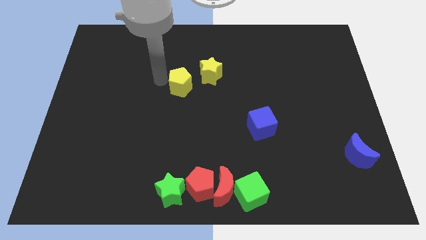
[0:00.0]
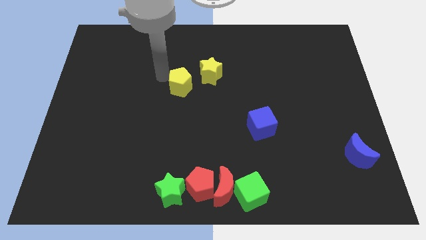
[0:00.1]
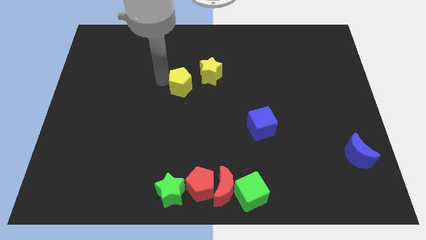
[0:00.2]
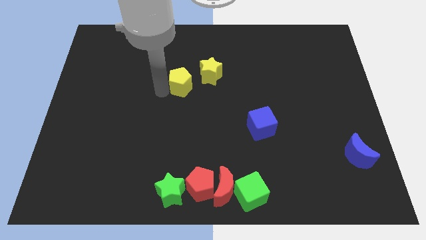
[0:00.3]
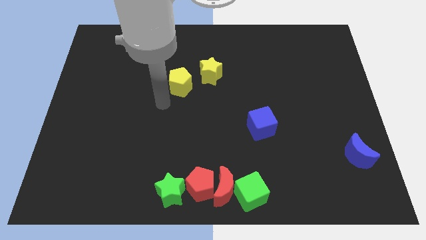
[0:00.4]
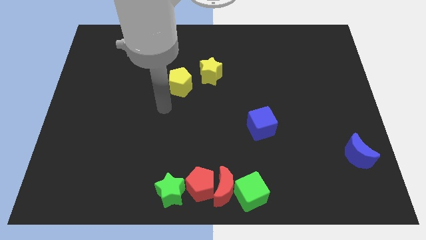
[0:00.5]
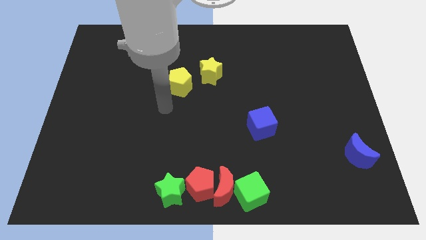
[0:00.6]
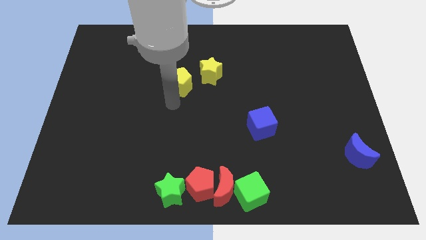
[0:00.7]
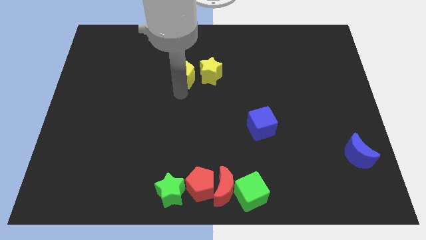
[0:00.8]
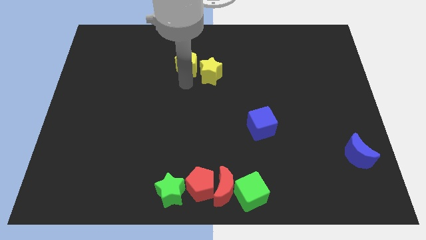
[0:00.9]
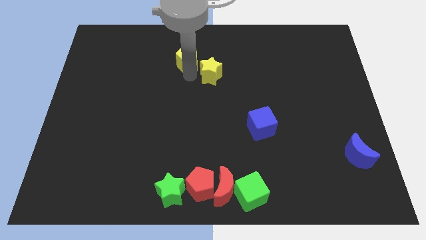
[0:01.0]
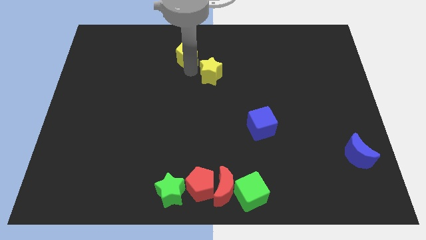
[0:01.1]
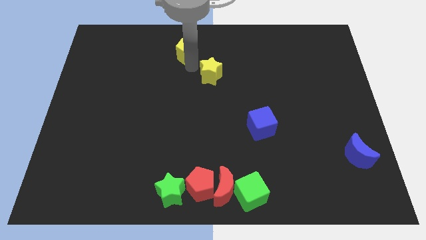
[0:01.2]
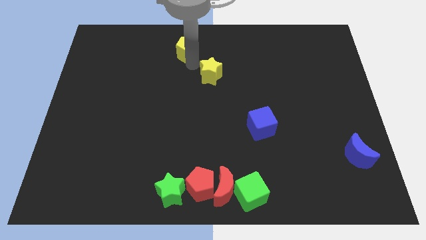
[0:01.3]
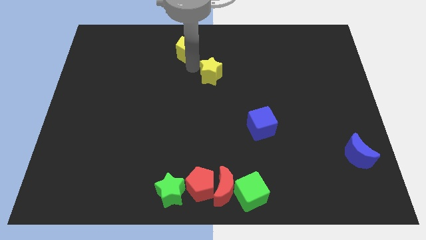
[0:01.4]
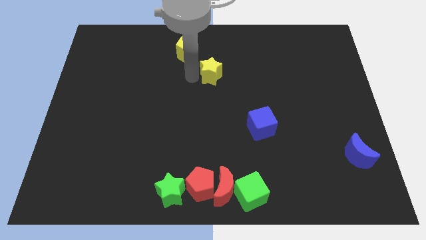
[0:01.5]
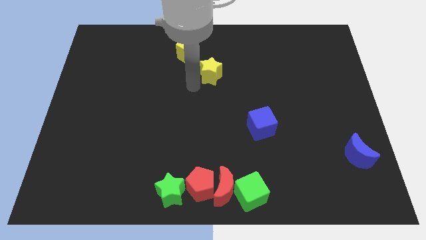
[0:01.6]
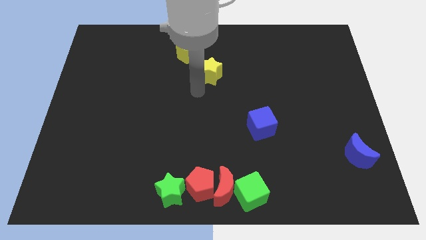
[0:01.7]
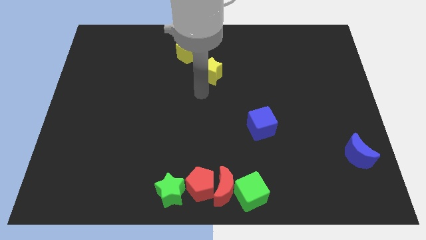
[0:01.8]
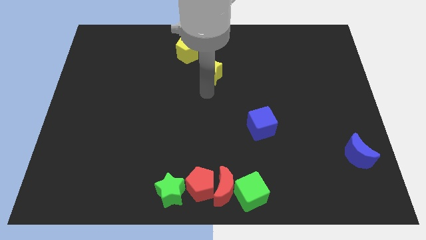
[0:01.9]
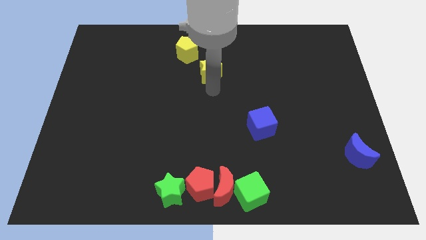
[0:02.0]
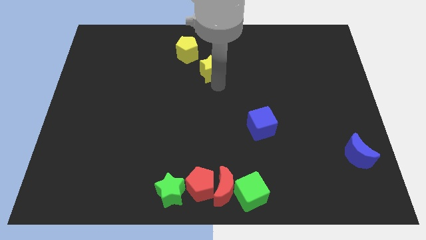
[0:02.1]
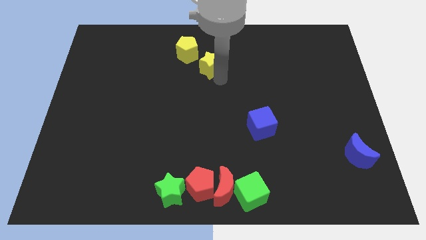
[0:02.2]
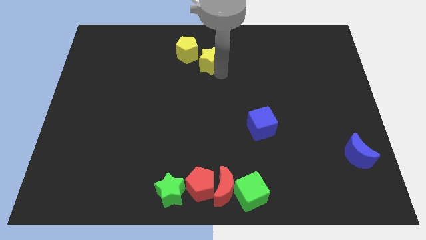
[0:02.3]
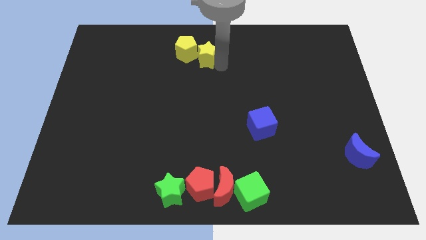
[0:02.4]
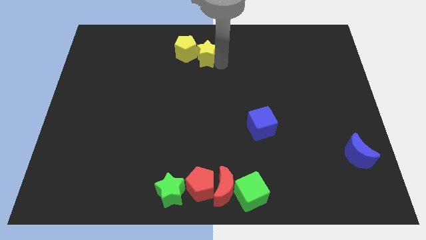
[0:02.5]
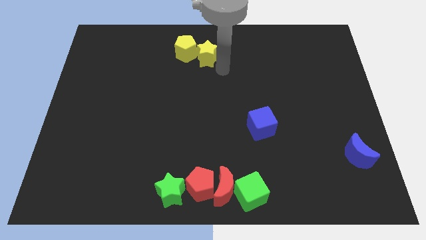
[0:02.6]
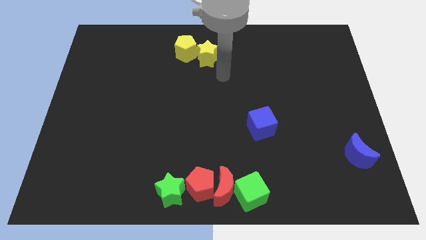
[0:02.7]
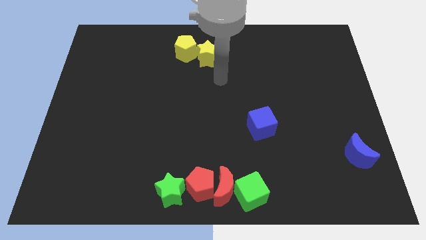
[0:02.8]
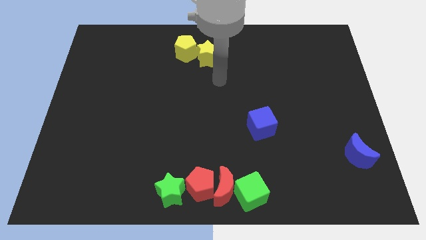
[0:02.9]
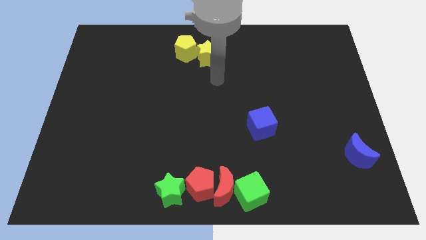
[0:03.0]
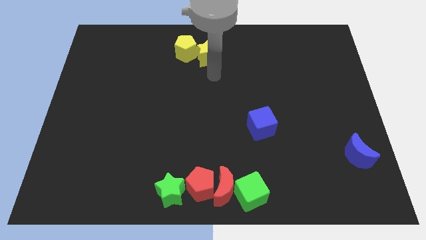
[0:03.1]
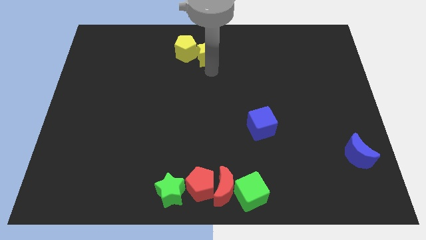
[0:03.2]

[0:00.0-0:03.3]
push the yellow pentagon towards the top center of the board

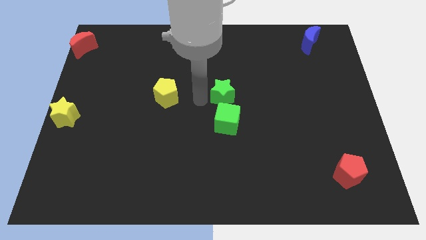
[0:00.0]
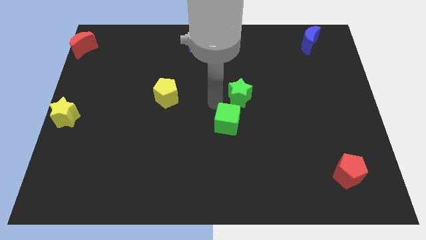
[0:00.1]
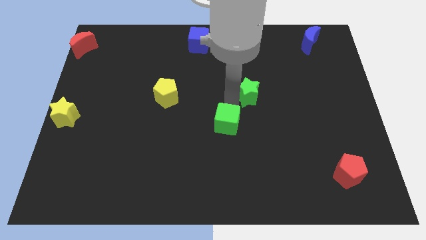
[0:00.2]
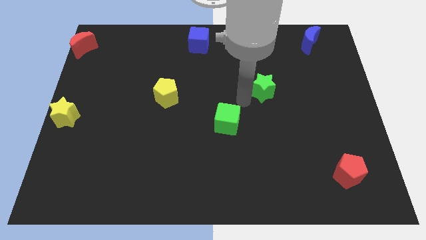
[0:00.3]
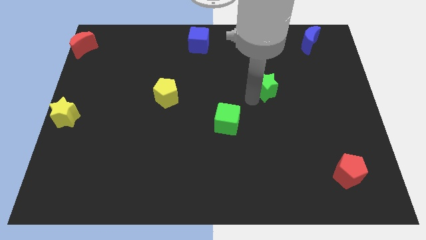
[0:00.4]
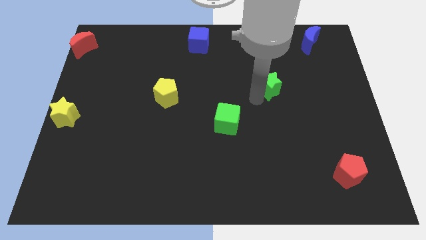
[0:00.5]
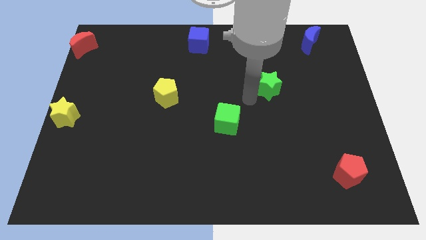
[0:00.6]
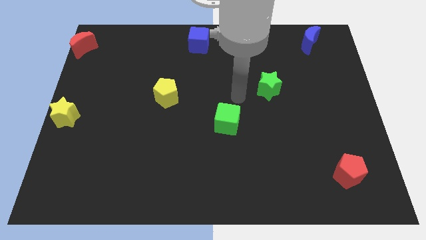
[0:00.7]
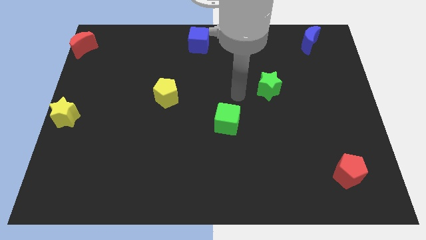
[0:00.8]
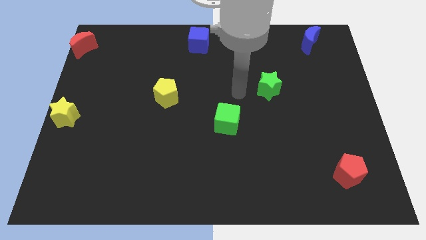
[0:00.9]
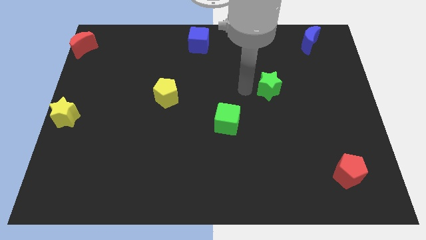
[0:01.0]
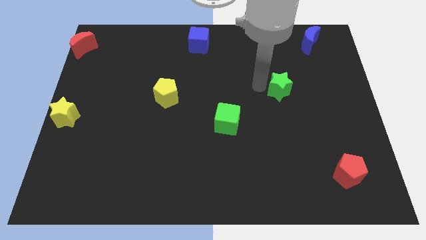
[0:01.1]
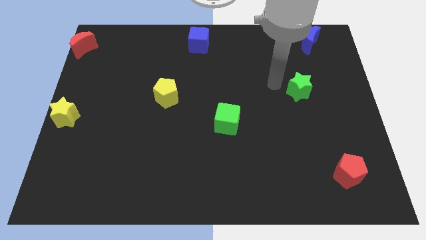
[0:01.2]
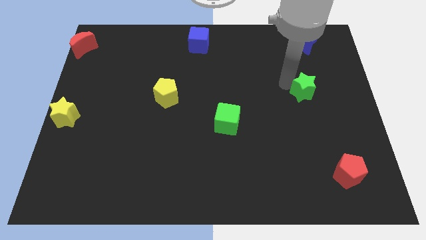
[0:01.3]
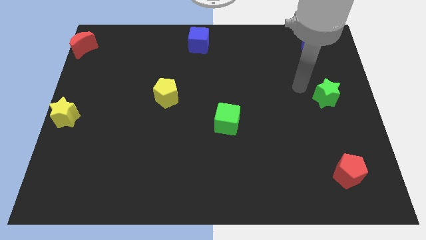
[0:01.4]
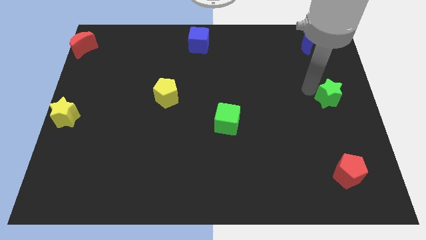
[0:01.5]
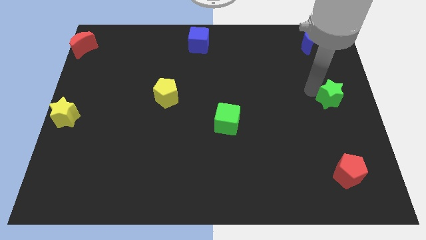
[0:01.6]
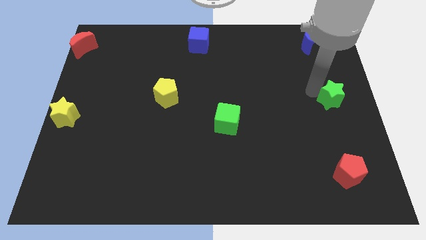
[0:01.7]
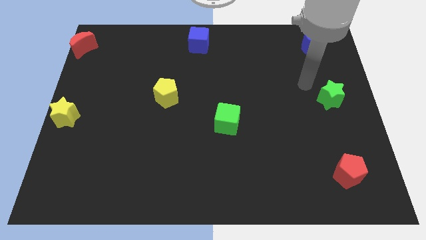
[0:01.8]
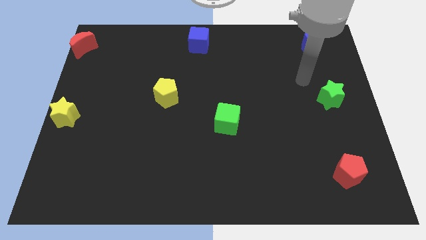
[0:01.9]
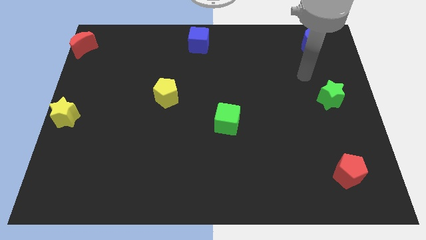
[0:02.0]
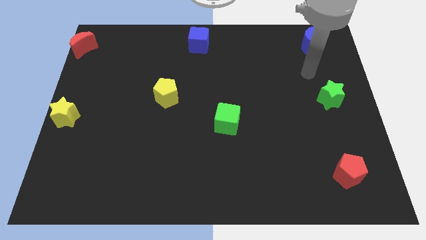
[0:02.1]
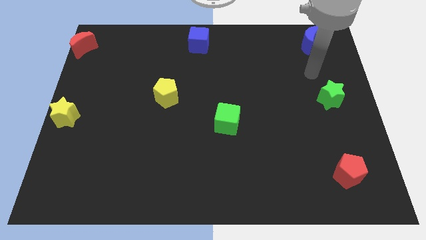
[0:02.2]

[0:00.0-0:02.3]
move the green star to the center right of the board

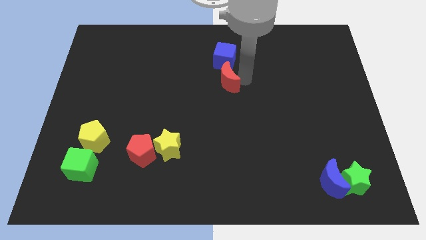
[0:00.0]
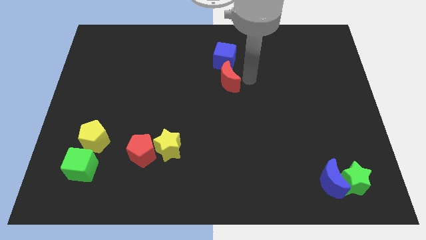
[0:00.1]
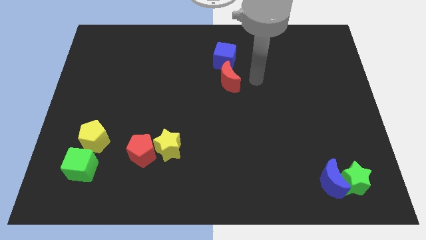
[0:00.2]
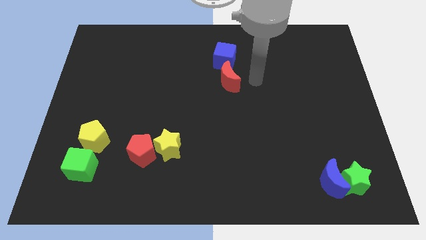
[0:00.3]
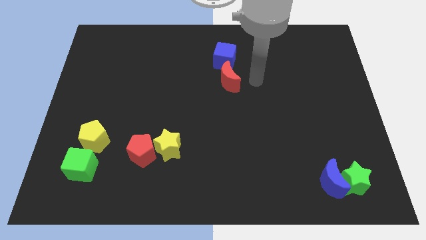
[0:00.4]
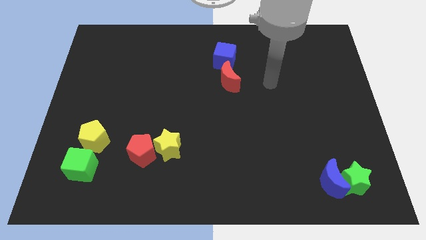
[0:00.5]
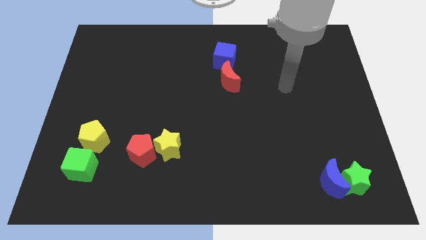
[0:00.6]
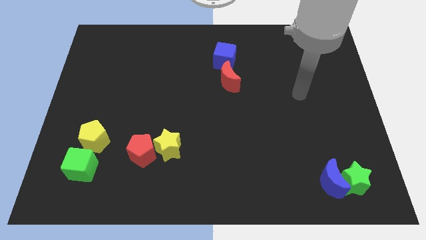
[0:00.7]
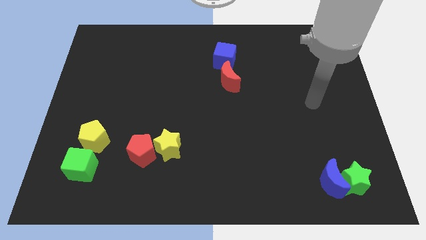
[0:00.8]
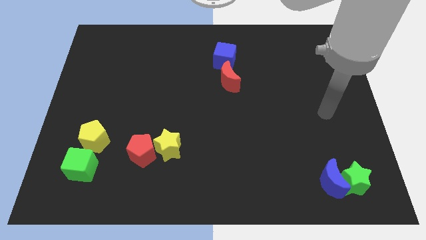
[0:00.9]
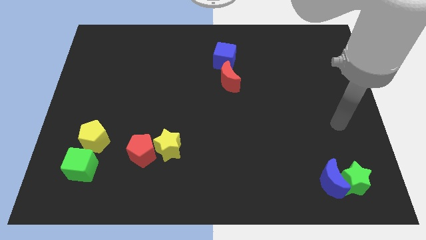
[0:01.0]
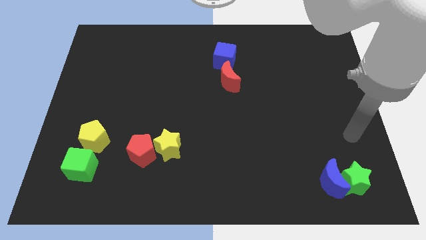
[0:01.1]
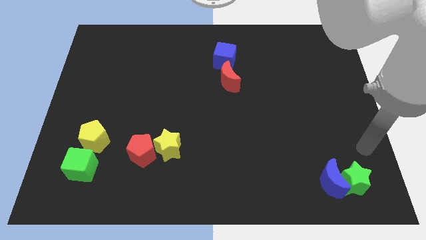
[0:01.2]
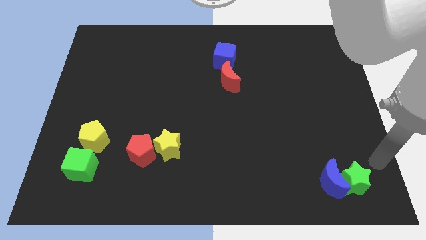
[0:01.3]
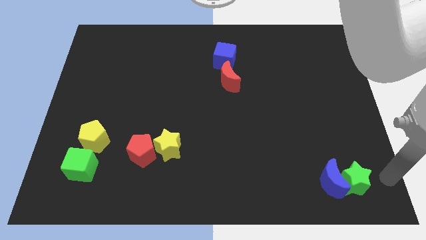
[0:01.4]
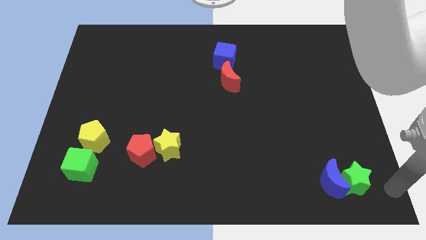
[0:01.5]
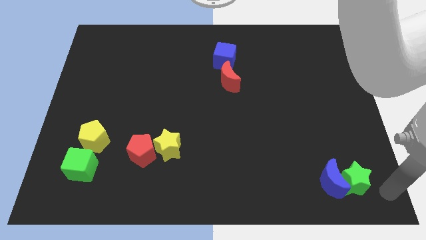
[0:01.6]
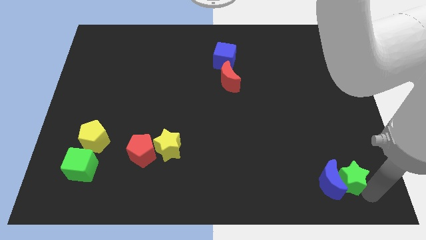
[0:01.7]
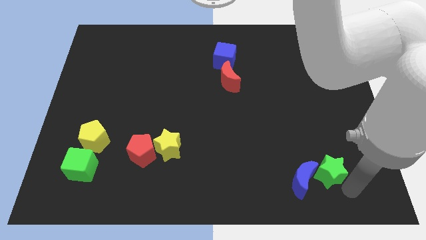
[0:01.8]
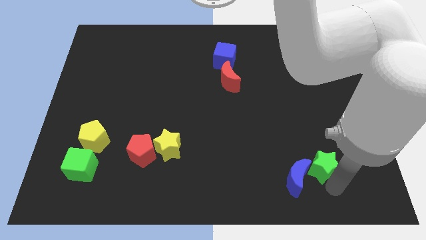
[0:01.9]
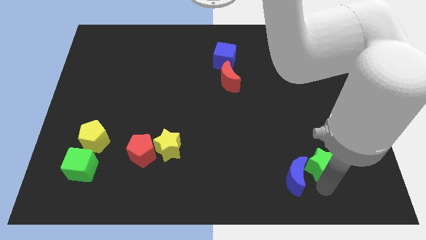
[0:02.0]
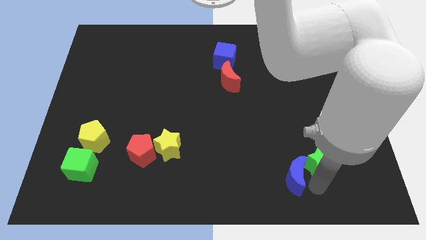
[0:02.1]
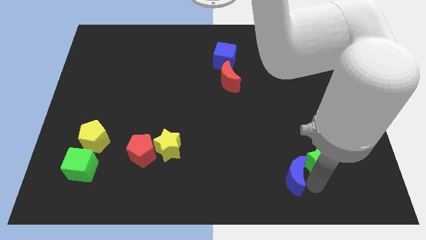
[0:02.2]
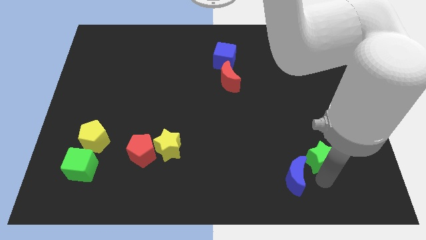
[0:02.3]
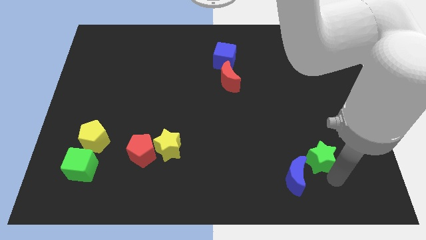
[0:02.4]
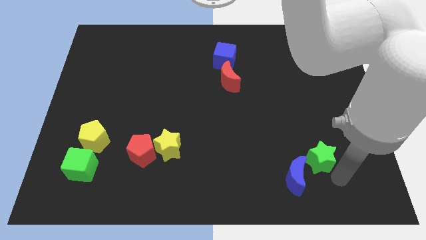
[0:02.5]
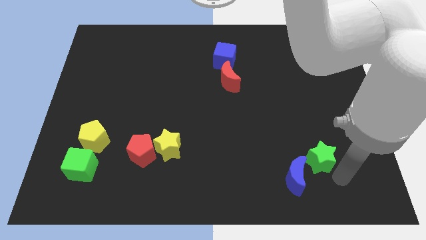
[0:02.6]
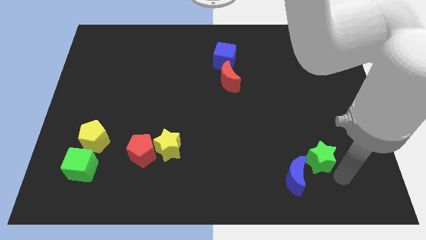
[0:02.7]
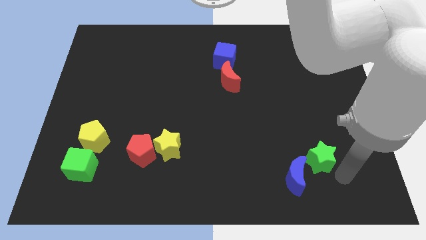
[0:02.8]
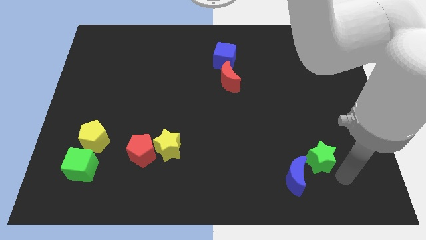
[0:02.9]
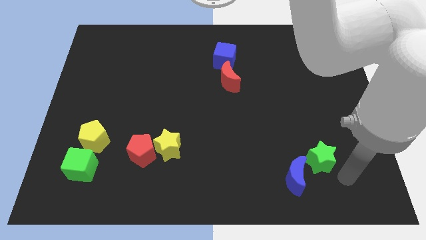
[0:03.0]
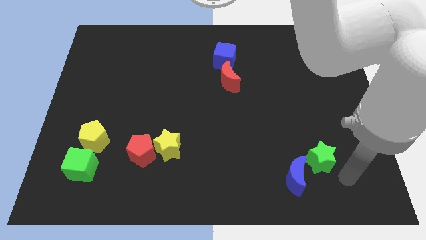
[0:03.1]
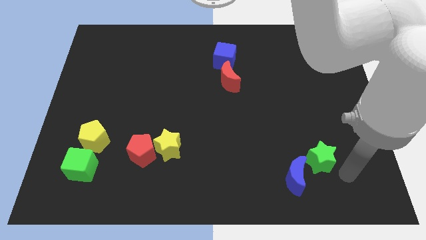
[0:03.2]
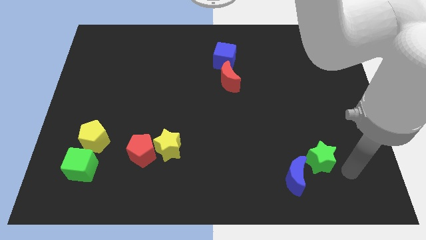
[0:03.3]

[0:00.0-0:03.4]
push the blue moon and yellow star towards the left side of the board

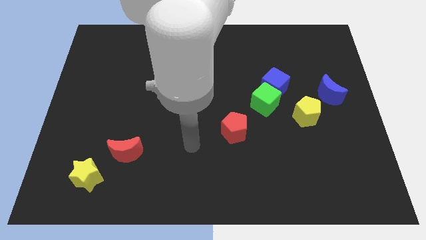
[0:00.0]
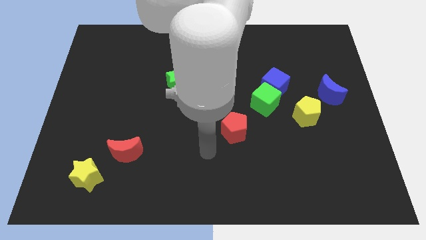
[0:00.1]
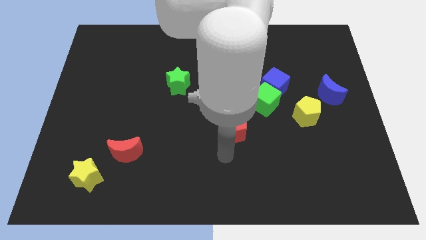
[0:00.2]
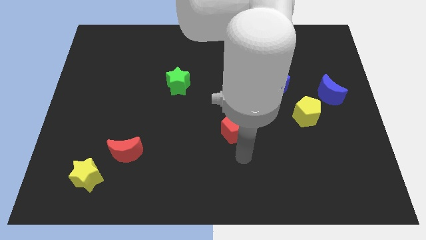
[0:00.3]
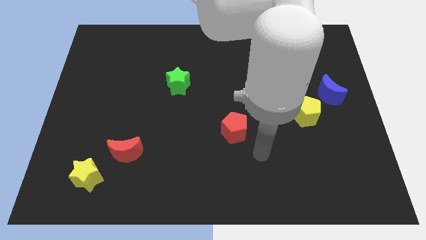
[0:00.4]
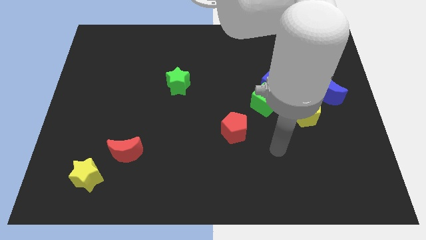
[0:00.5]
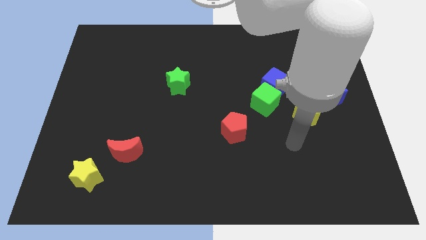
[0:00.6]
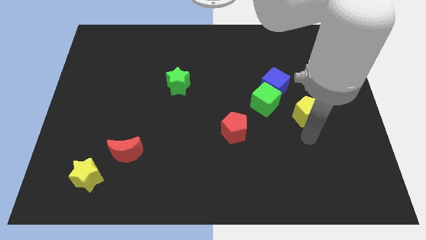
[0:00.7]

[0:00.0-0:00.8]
push arm at the bottom of yellow pentagon
